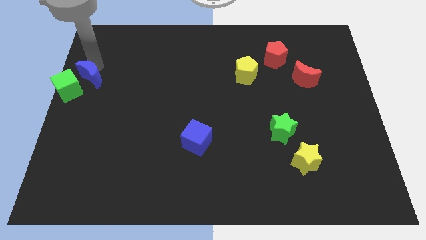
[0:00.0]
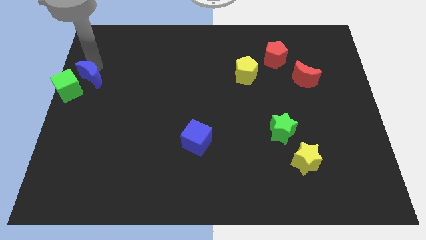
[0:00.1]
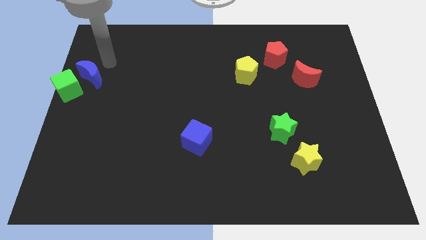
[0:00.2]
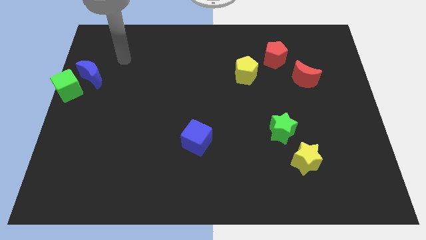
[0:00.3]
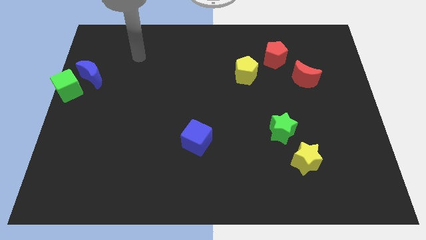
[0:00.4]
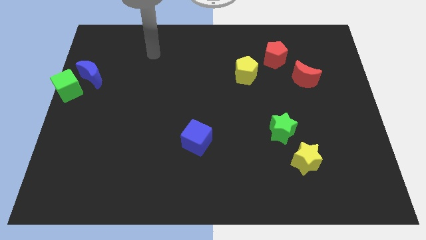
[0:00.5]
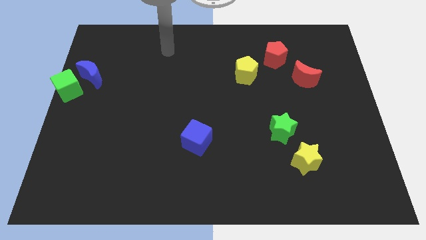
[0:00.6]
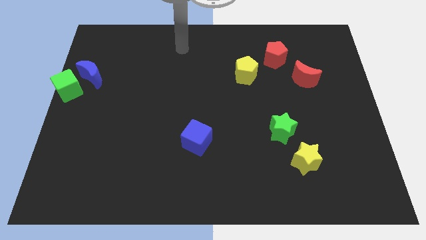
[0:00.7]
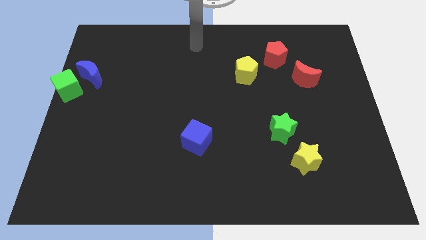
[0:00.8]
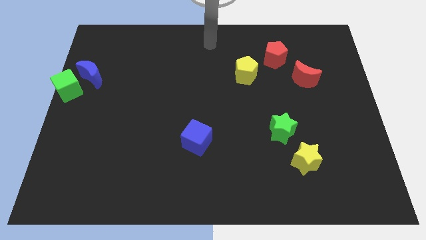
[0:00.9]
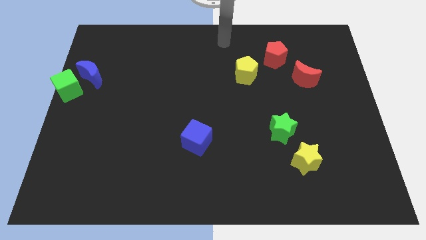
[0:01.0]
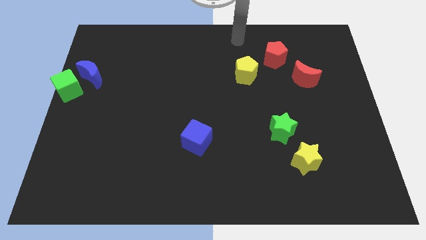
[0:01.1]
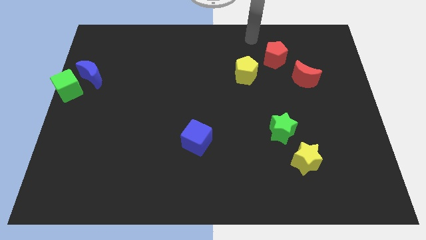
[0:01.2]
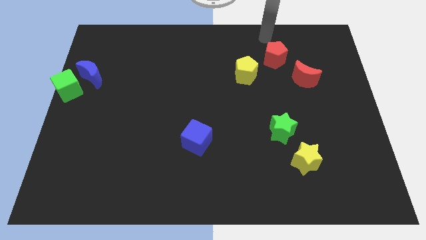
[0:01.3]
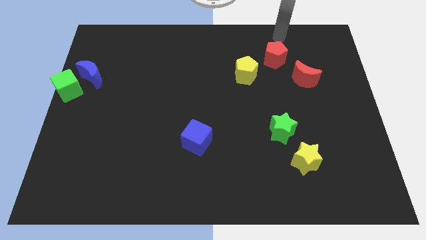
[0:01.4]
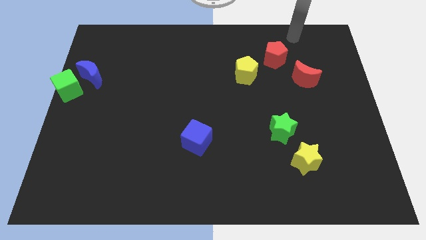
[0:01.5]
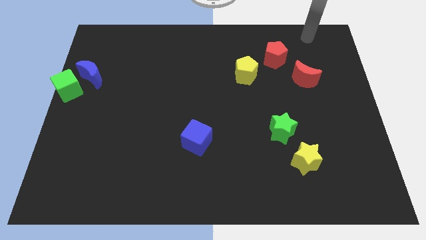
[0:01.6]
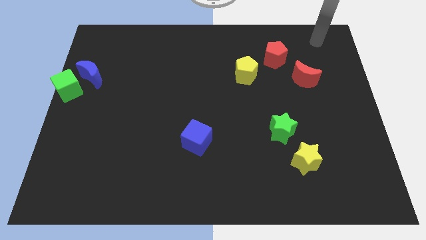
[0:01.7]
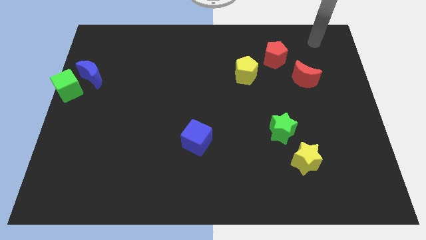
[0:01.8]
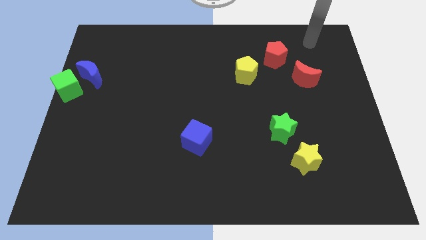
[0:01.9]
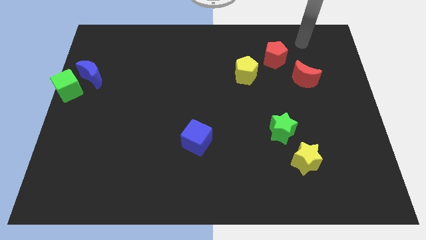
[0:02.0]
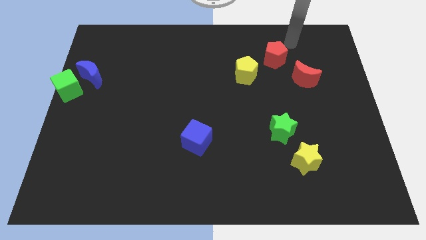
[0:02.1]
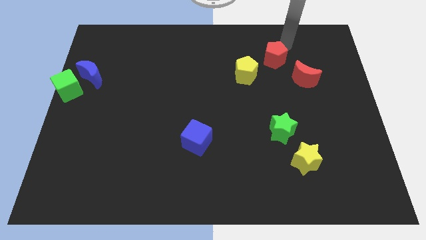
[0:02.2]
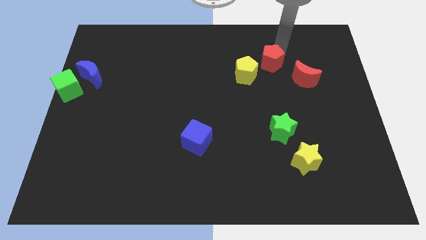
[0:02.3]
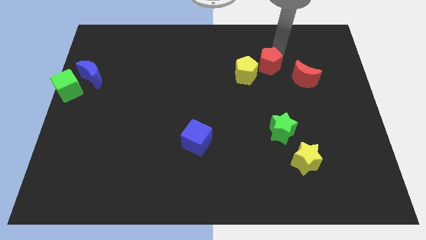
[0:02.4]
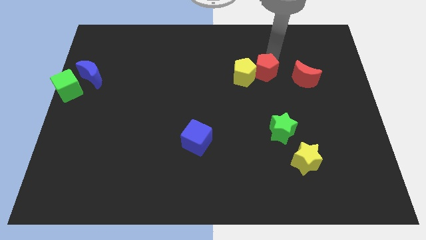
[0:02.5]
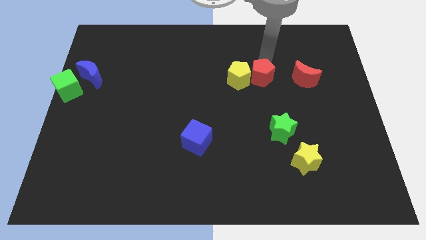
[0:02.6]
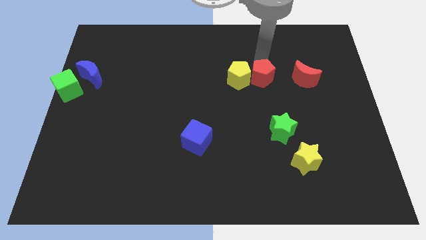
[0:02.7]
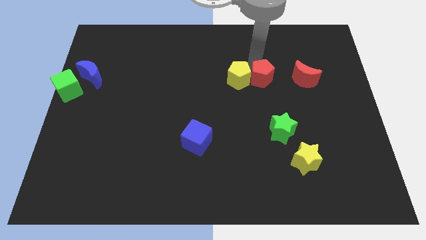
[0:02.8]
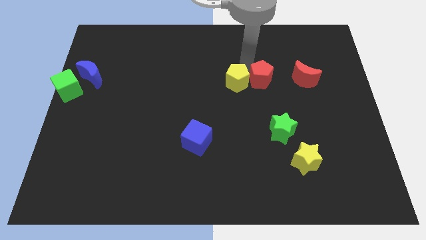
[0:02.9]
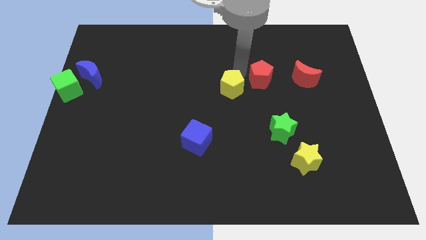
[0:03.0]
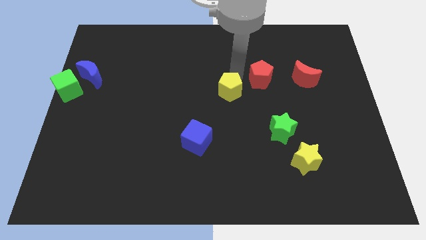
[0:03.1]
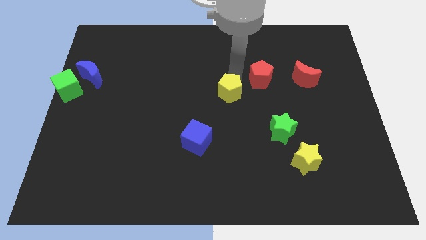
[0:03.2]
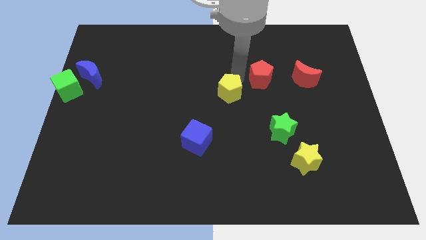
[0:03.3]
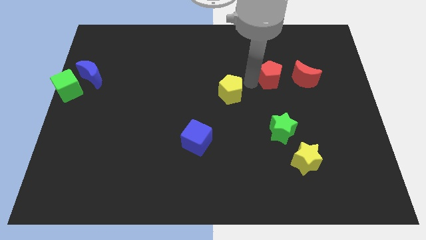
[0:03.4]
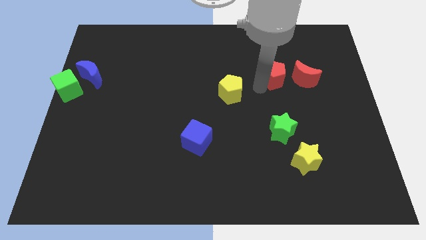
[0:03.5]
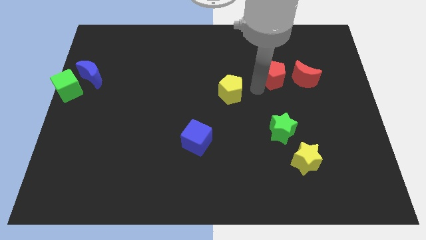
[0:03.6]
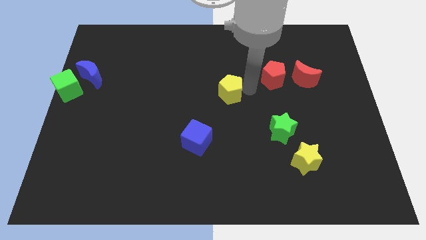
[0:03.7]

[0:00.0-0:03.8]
push the red pentagon into the yellow pentagon

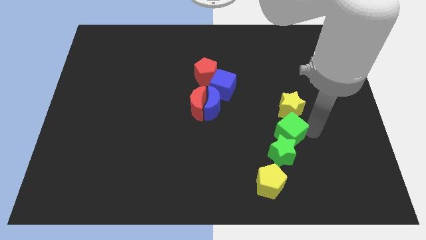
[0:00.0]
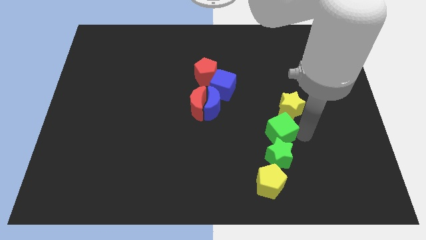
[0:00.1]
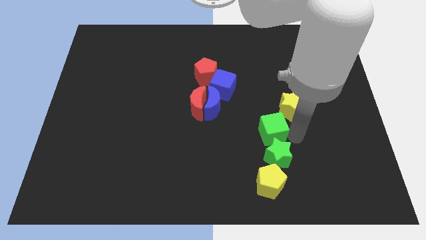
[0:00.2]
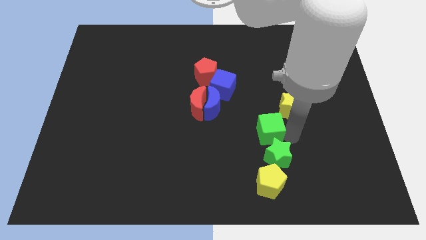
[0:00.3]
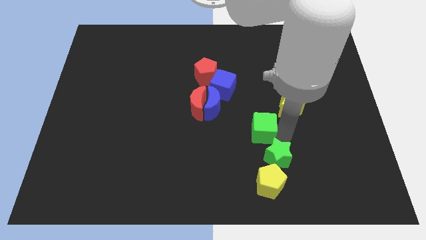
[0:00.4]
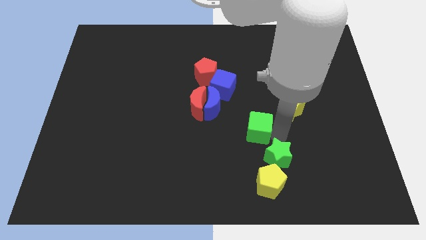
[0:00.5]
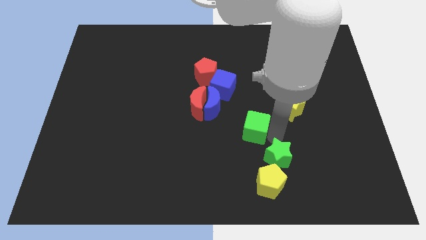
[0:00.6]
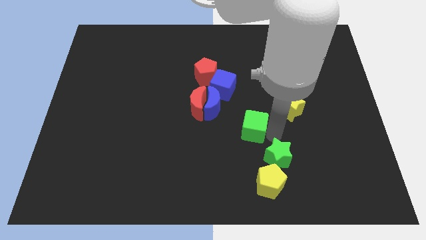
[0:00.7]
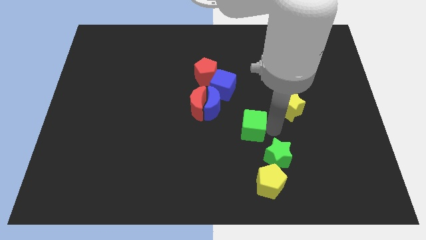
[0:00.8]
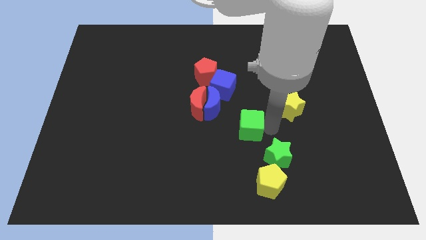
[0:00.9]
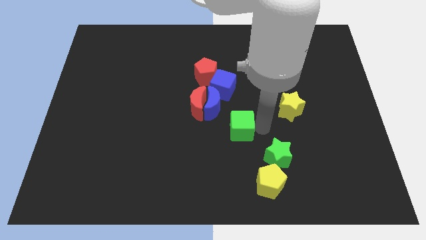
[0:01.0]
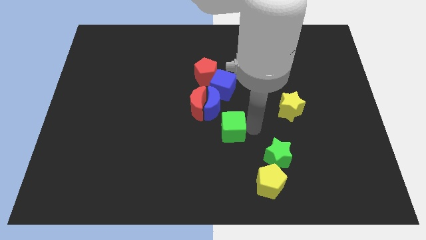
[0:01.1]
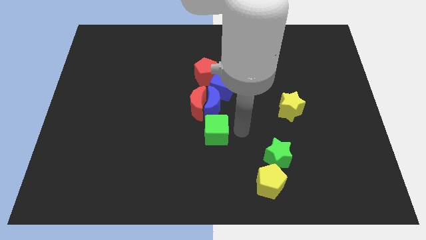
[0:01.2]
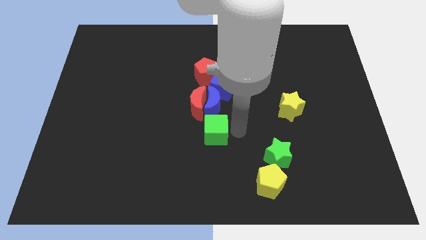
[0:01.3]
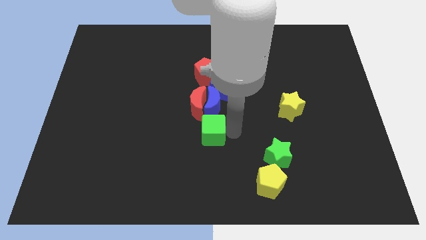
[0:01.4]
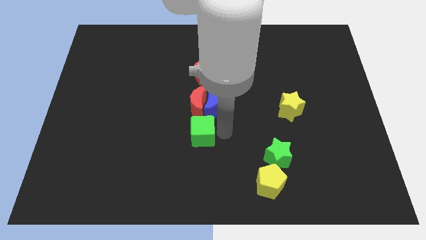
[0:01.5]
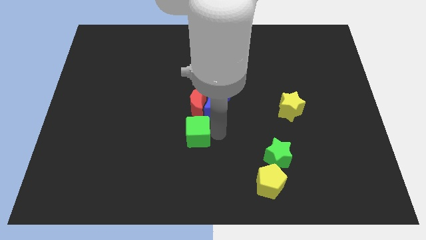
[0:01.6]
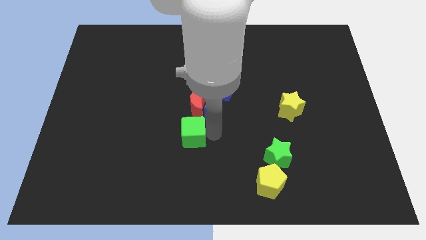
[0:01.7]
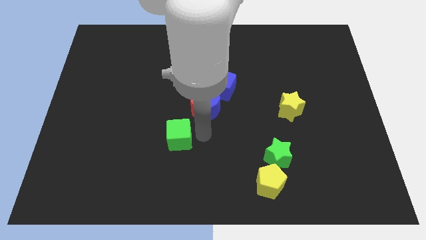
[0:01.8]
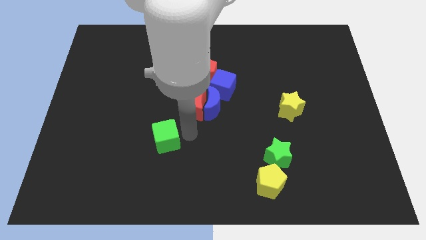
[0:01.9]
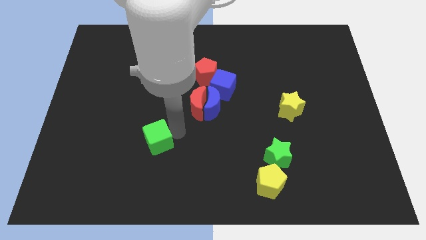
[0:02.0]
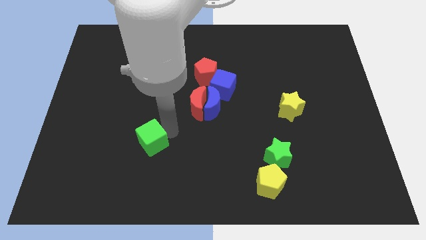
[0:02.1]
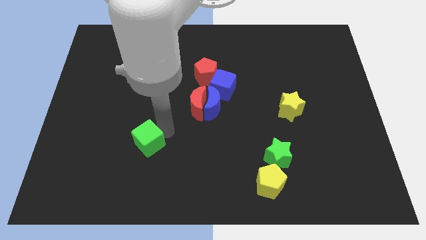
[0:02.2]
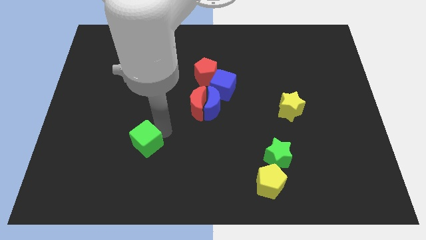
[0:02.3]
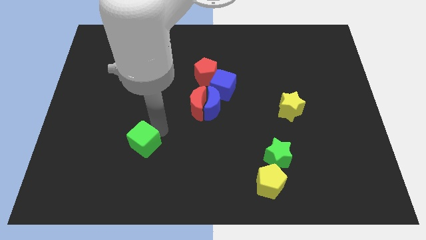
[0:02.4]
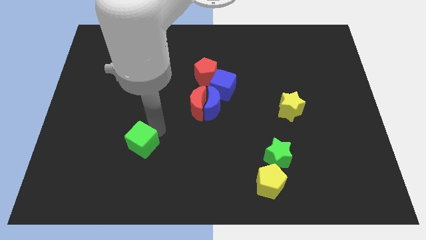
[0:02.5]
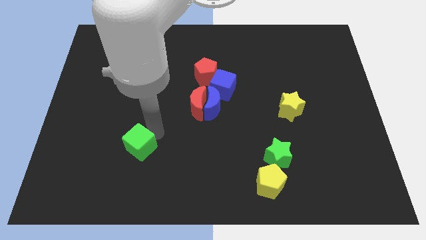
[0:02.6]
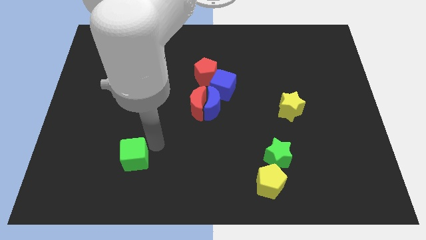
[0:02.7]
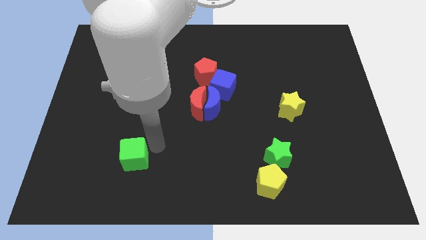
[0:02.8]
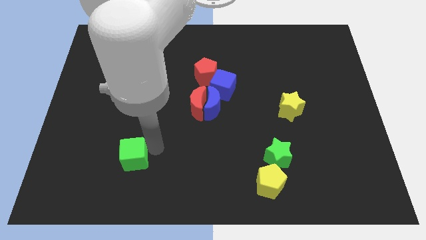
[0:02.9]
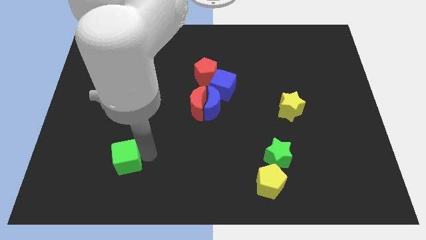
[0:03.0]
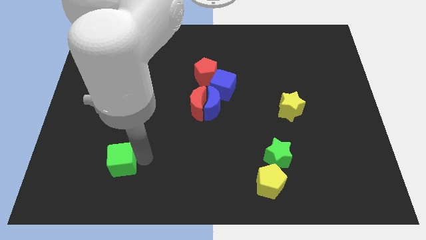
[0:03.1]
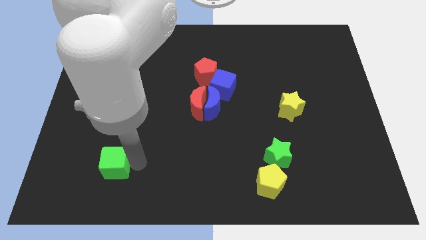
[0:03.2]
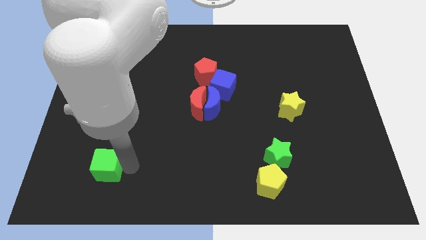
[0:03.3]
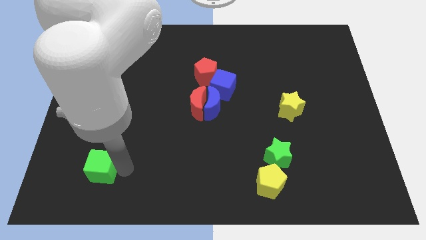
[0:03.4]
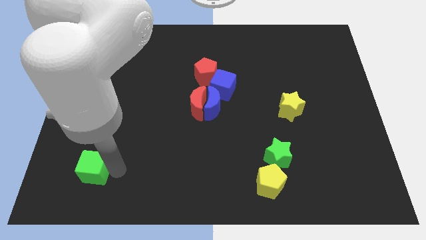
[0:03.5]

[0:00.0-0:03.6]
separate the green cube from the green star

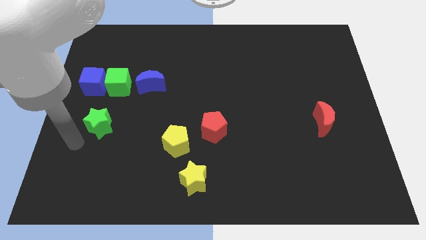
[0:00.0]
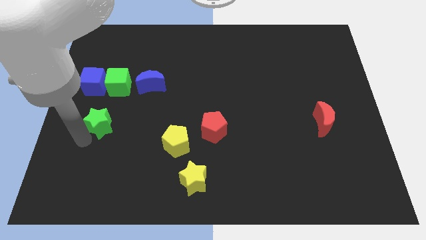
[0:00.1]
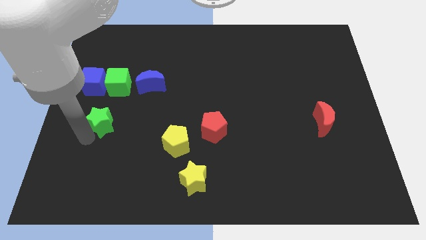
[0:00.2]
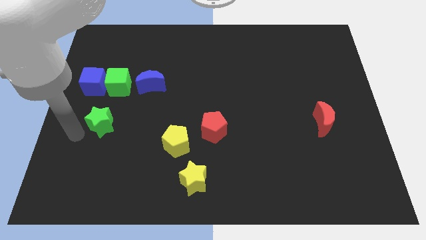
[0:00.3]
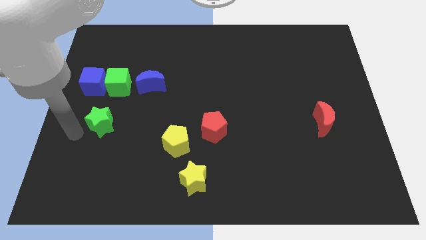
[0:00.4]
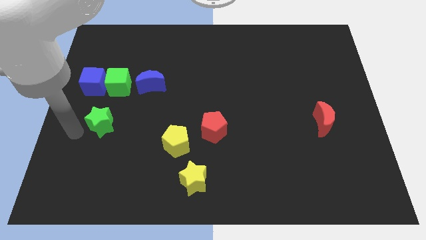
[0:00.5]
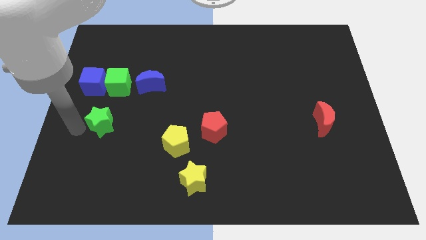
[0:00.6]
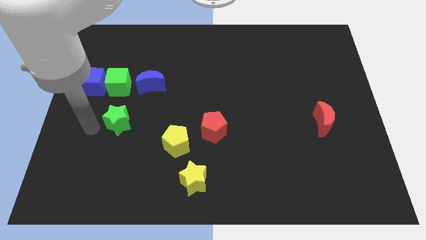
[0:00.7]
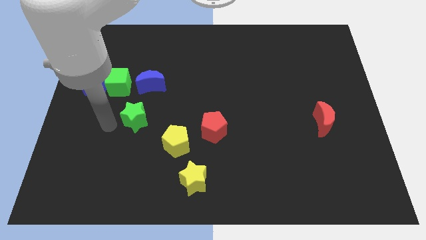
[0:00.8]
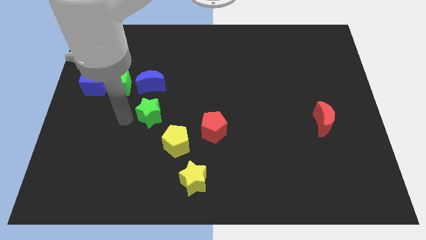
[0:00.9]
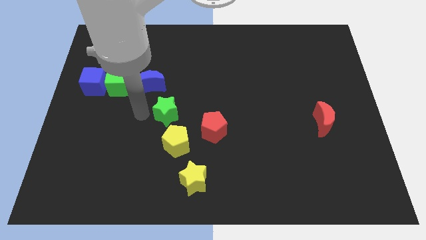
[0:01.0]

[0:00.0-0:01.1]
place the green star below the blue crescent

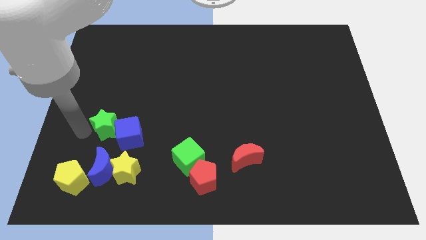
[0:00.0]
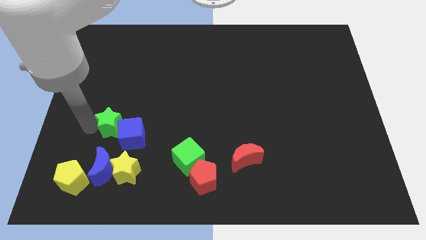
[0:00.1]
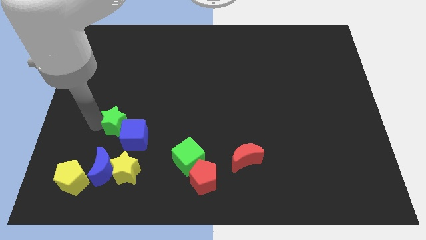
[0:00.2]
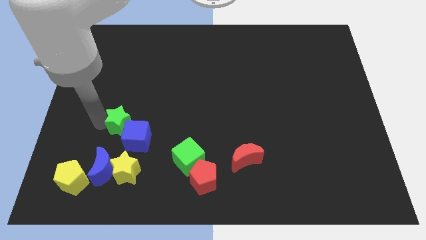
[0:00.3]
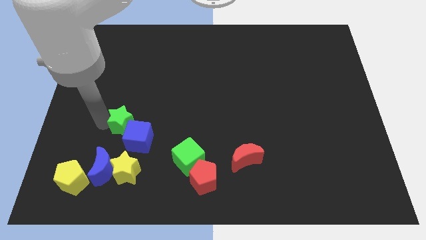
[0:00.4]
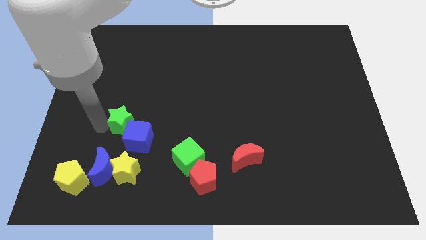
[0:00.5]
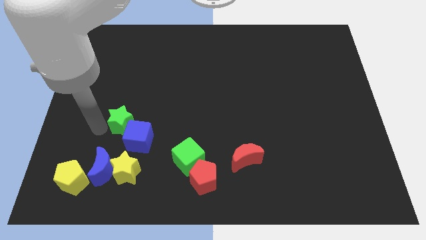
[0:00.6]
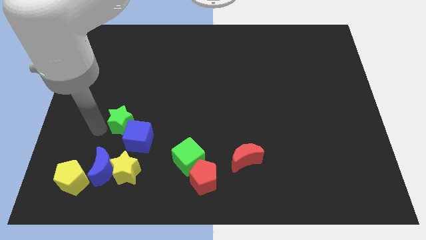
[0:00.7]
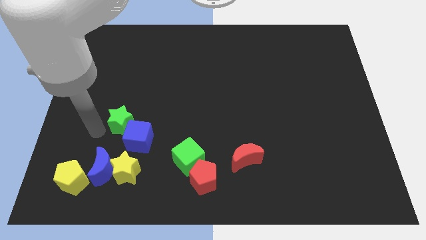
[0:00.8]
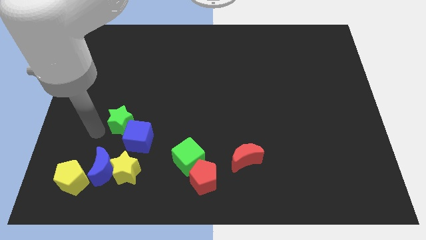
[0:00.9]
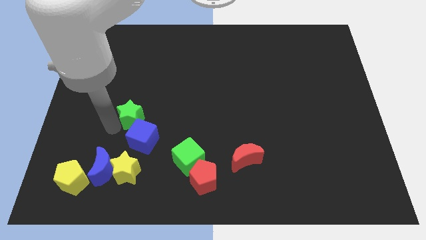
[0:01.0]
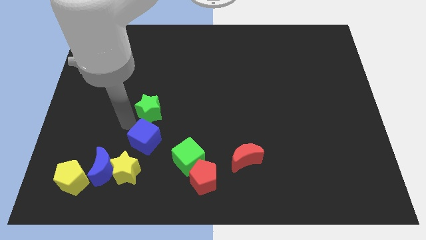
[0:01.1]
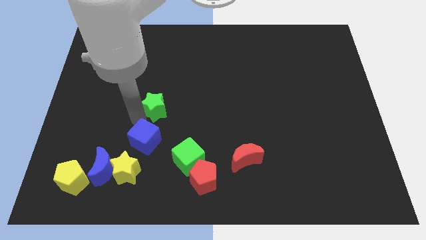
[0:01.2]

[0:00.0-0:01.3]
move the green star to the top side of the blue cube
